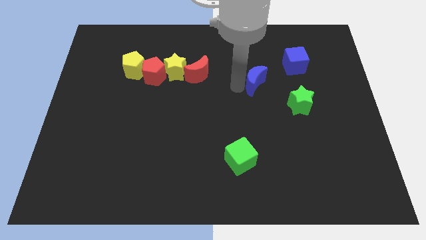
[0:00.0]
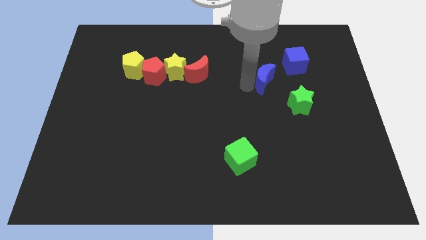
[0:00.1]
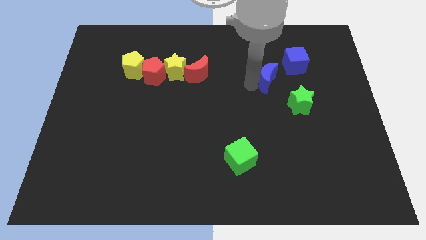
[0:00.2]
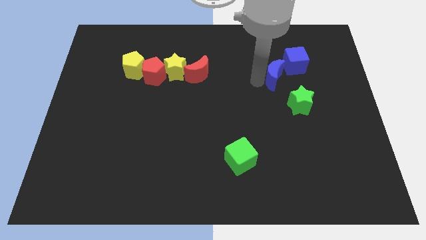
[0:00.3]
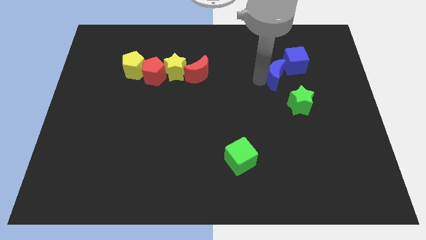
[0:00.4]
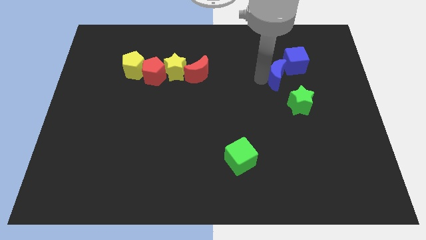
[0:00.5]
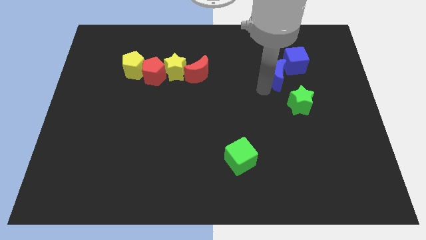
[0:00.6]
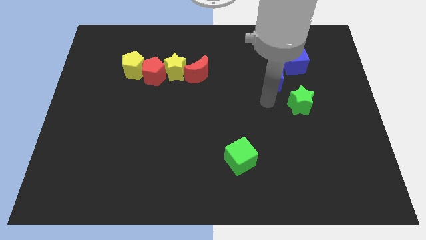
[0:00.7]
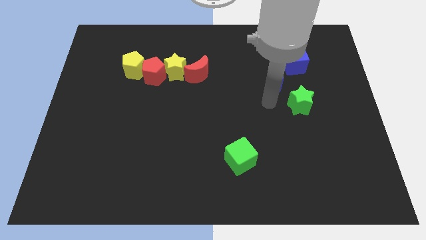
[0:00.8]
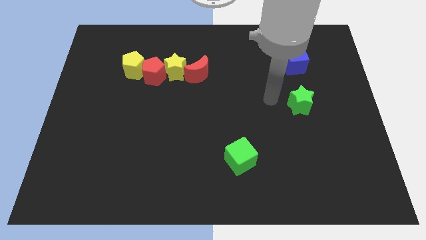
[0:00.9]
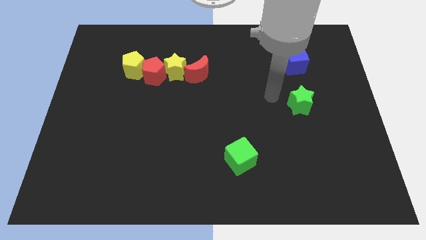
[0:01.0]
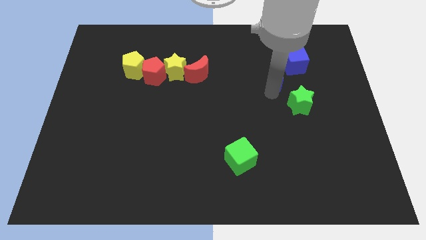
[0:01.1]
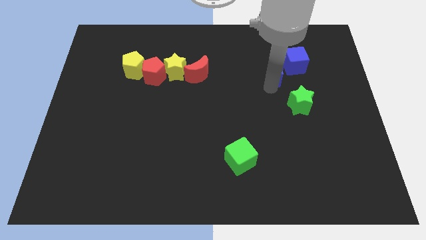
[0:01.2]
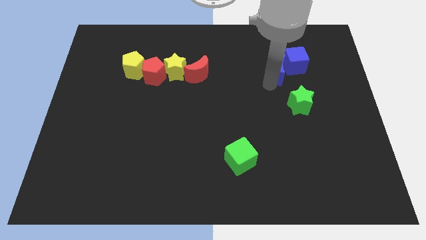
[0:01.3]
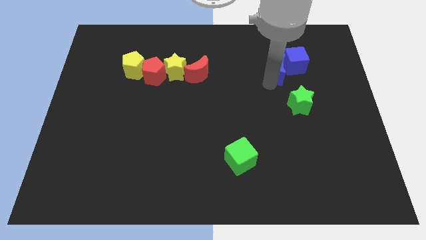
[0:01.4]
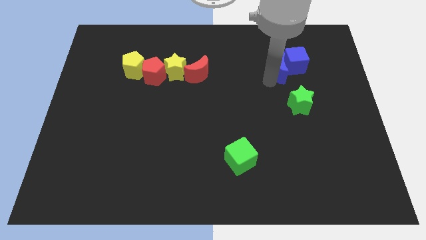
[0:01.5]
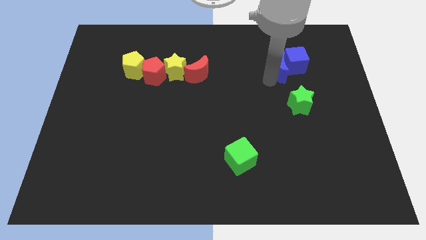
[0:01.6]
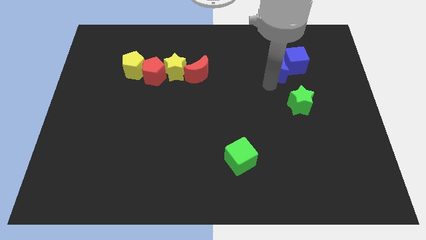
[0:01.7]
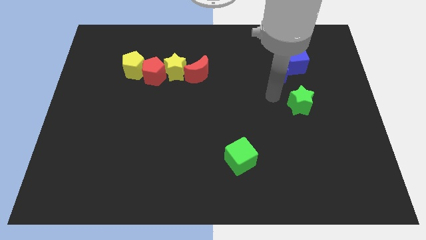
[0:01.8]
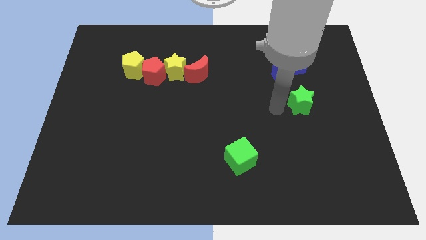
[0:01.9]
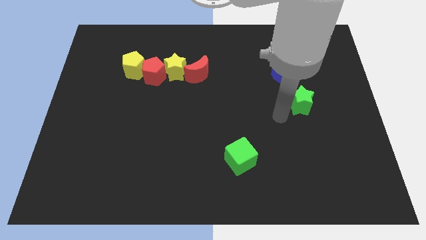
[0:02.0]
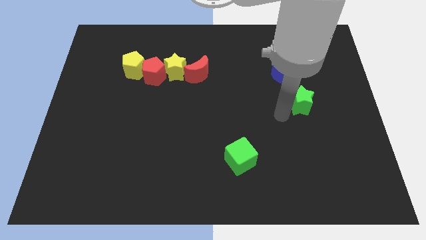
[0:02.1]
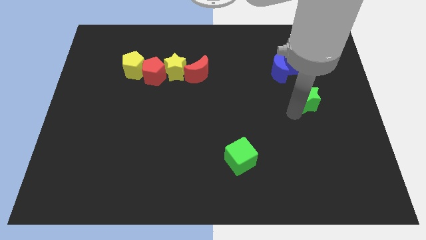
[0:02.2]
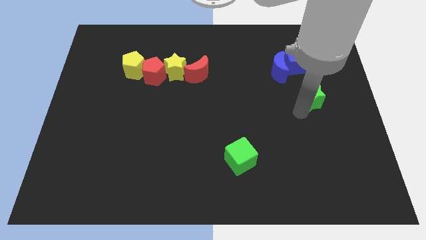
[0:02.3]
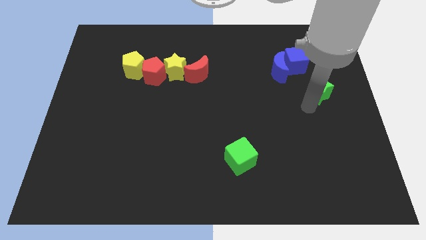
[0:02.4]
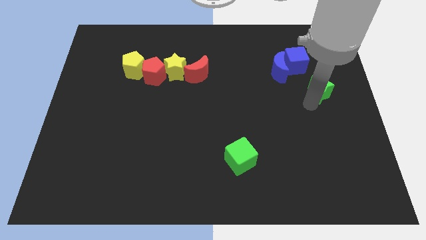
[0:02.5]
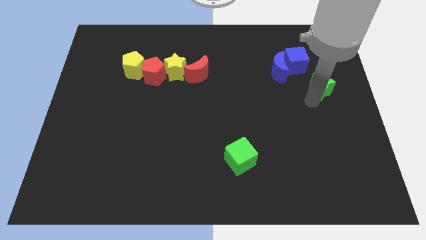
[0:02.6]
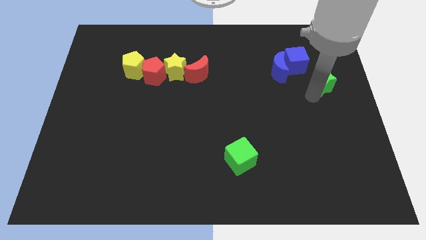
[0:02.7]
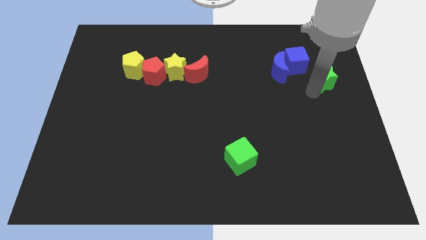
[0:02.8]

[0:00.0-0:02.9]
place the green star diagonal to the blue cube

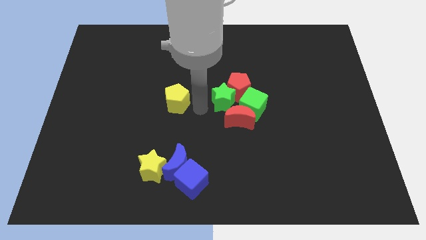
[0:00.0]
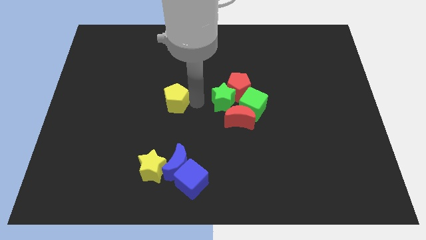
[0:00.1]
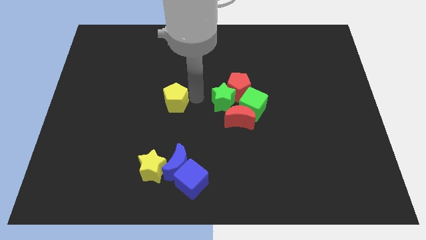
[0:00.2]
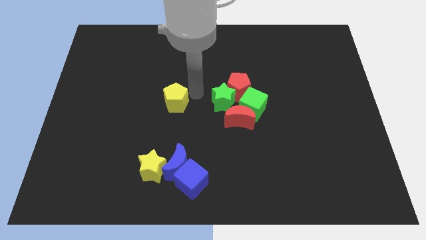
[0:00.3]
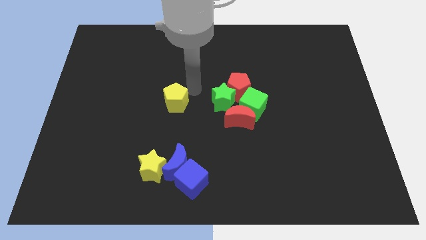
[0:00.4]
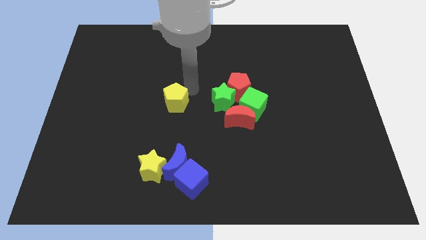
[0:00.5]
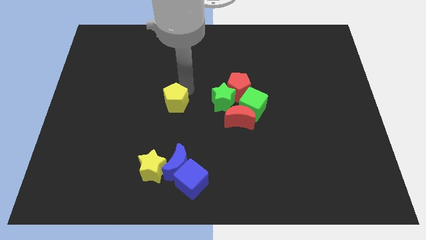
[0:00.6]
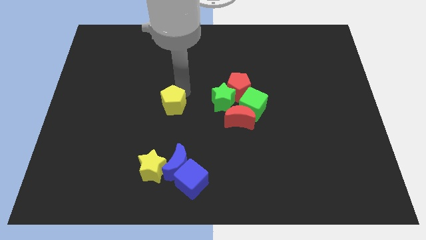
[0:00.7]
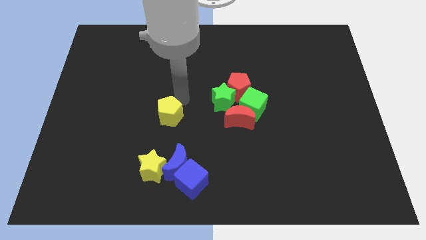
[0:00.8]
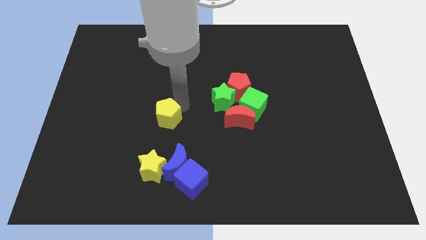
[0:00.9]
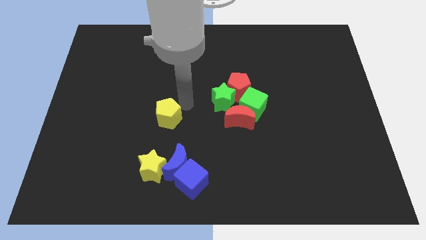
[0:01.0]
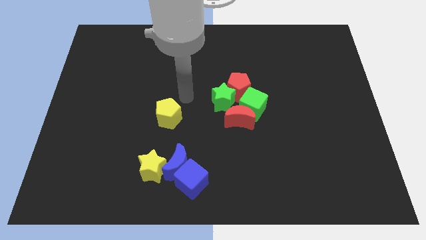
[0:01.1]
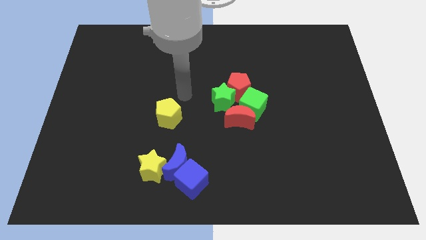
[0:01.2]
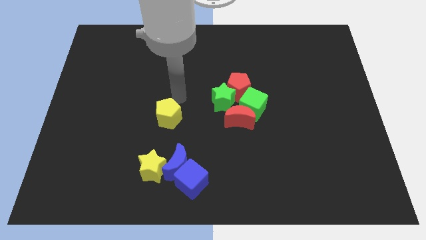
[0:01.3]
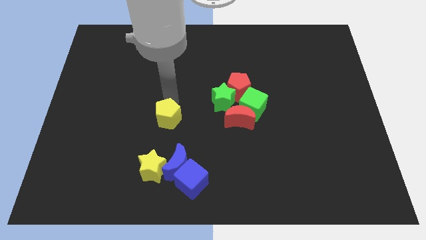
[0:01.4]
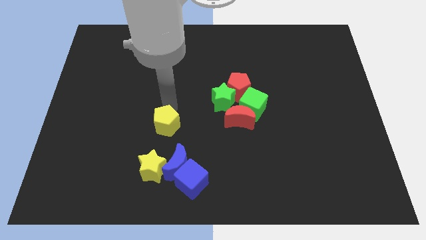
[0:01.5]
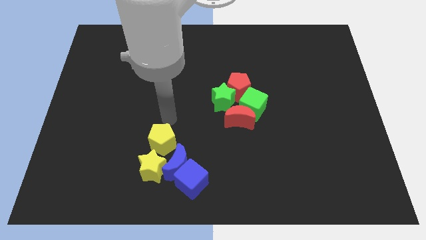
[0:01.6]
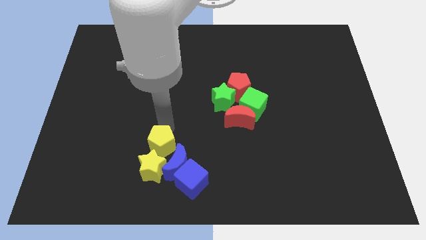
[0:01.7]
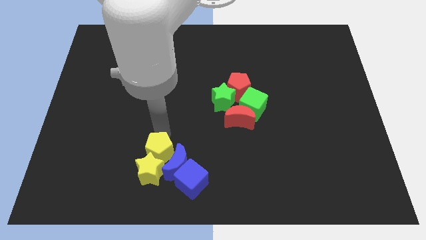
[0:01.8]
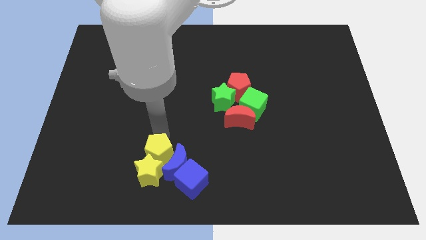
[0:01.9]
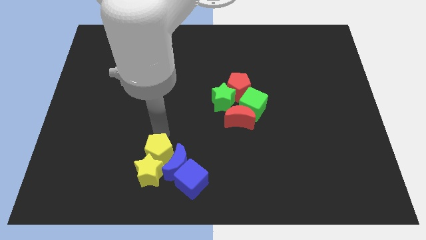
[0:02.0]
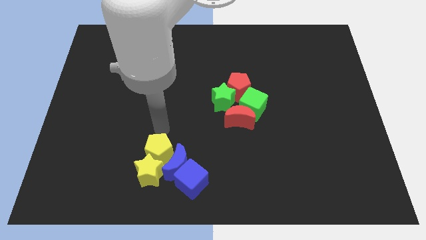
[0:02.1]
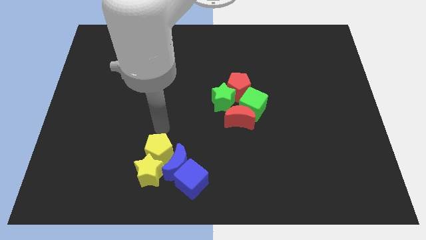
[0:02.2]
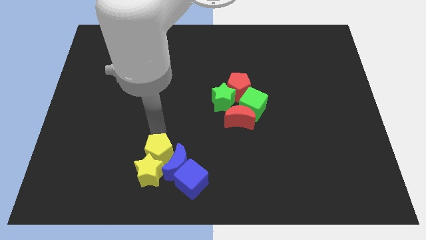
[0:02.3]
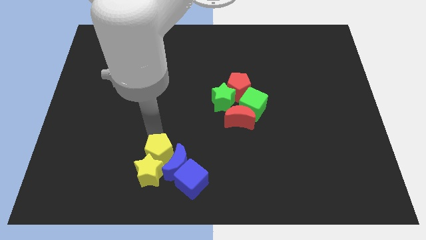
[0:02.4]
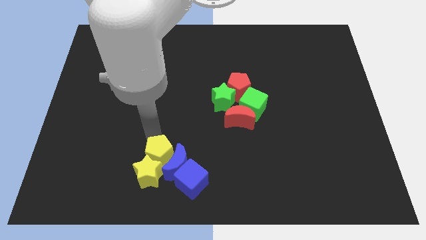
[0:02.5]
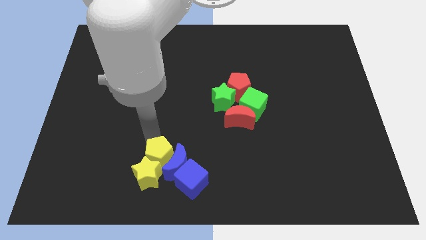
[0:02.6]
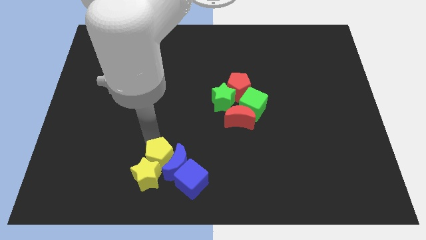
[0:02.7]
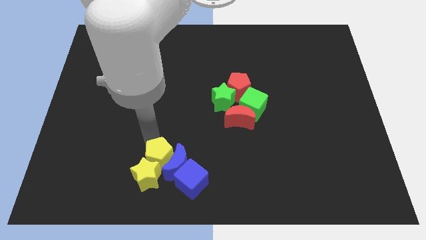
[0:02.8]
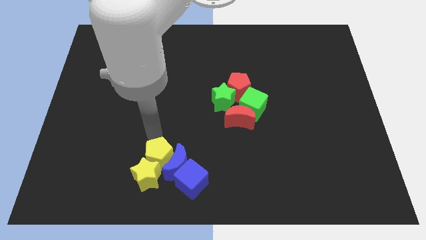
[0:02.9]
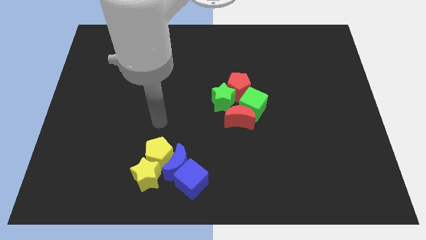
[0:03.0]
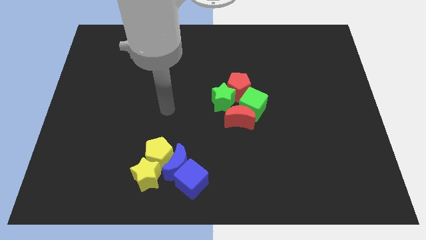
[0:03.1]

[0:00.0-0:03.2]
move the yellow pentagon into the yellow star

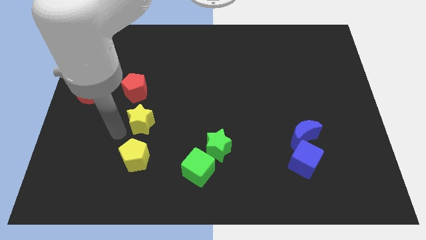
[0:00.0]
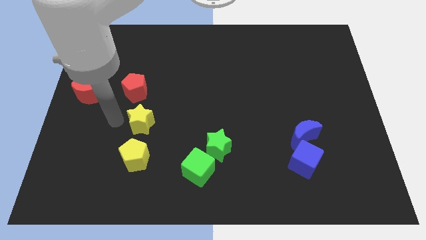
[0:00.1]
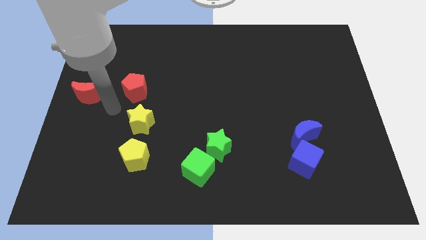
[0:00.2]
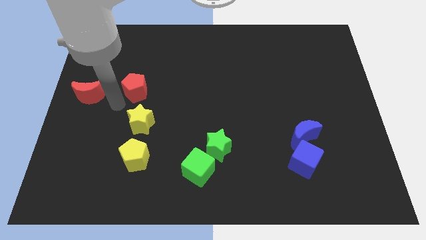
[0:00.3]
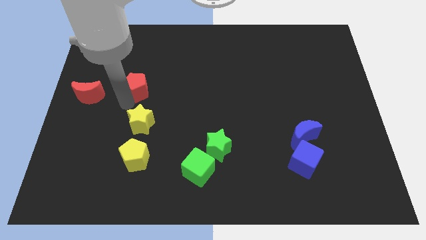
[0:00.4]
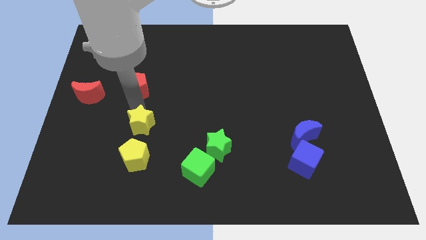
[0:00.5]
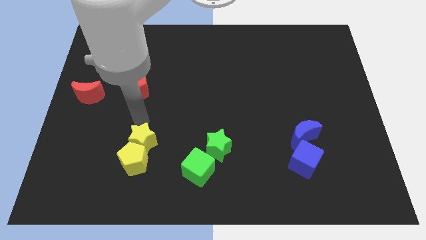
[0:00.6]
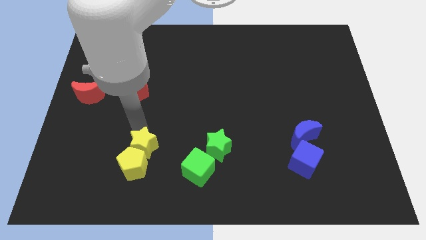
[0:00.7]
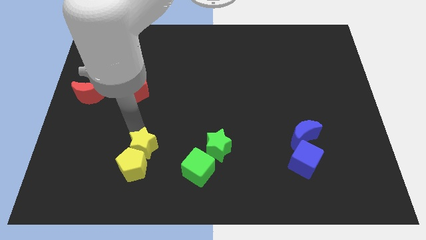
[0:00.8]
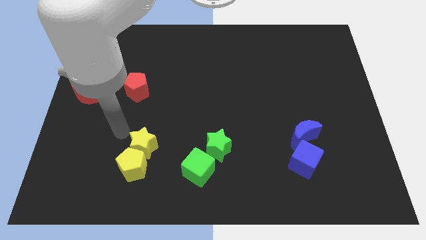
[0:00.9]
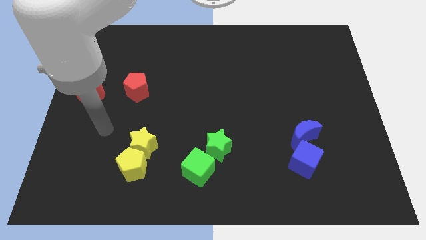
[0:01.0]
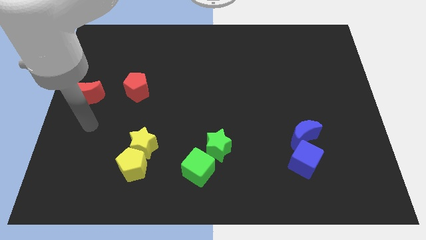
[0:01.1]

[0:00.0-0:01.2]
push yellow star into the yellow pentagon

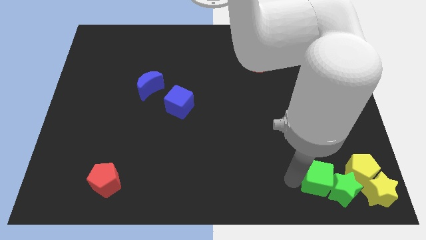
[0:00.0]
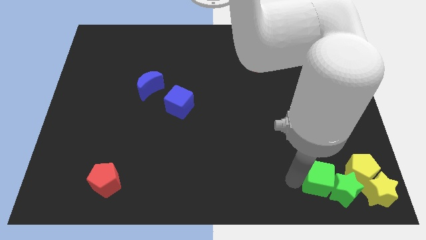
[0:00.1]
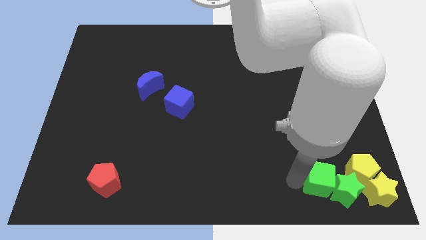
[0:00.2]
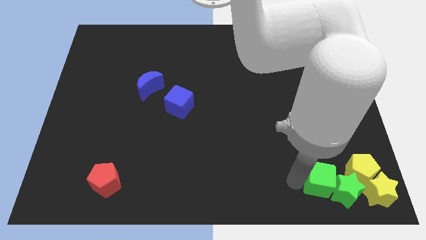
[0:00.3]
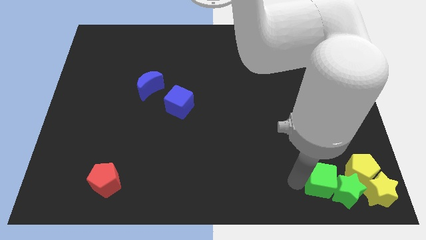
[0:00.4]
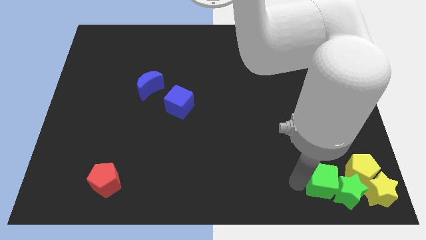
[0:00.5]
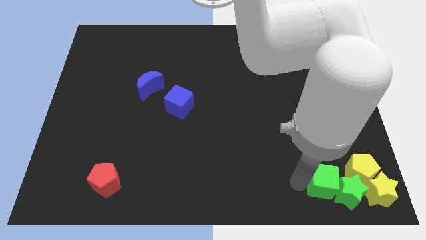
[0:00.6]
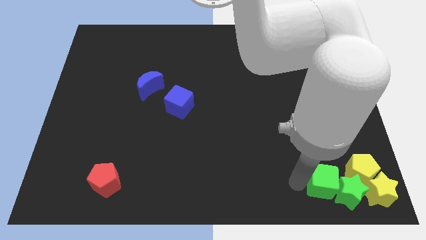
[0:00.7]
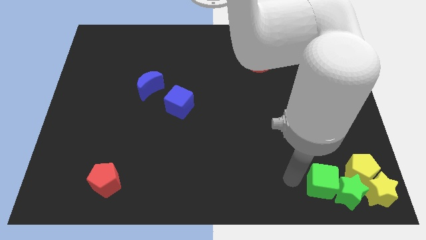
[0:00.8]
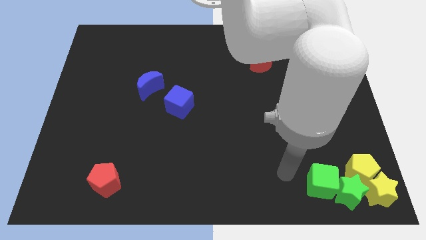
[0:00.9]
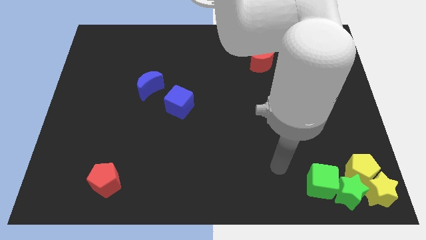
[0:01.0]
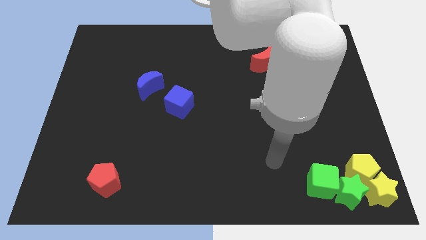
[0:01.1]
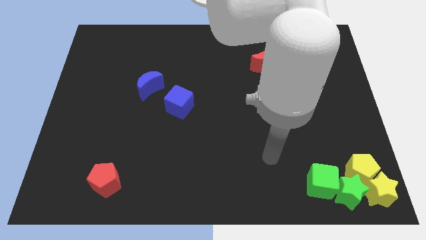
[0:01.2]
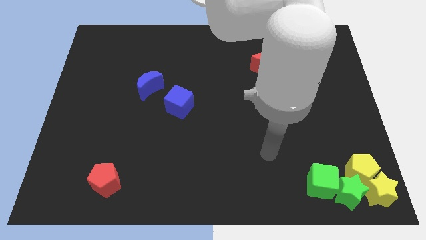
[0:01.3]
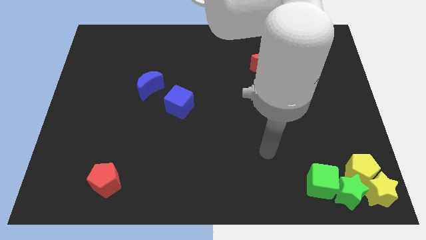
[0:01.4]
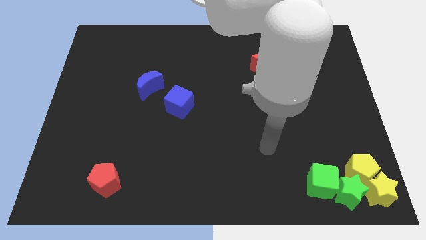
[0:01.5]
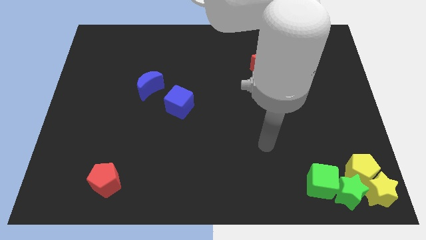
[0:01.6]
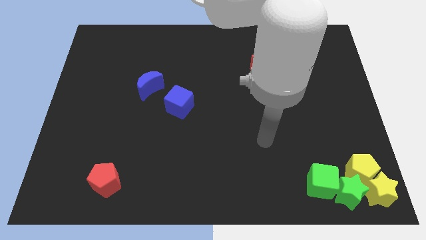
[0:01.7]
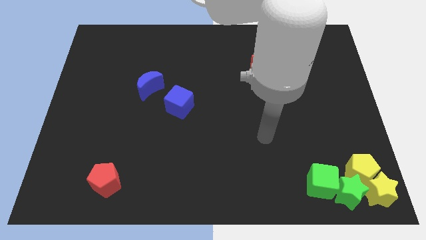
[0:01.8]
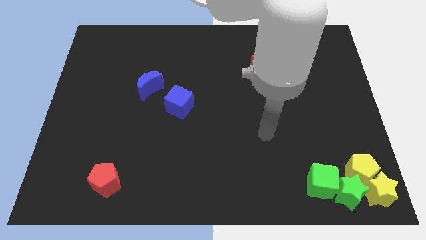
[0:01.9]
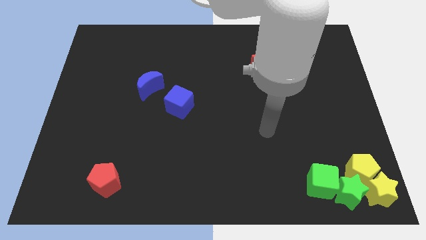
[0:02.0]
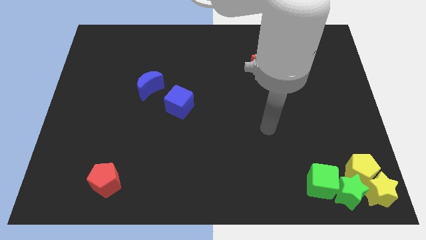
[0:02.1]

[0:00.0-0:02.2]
move your arm away from green cube
